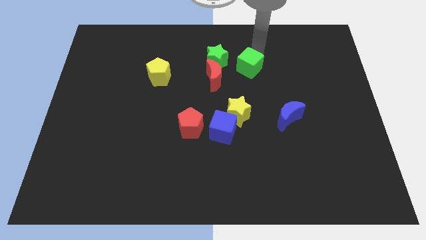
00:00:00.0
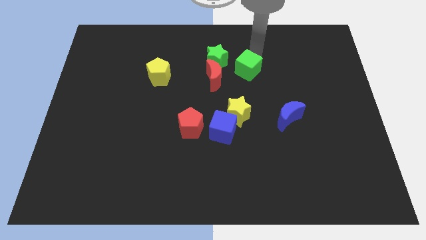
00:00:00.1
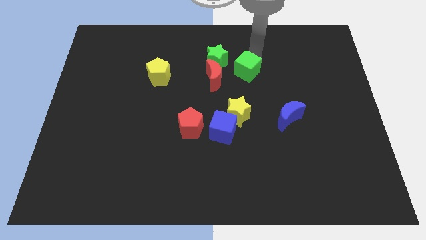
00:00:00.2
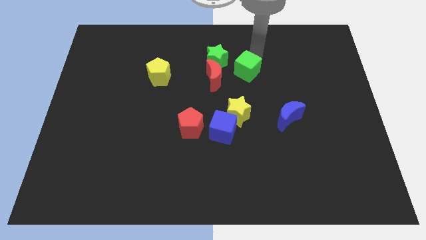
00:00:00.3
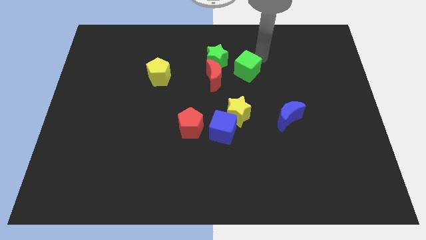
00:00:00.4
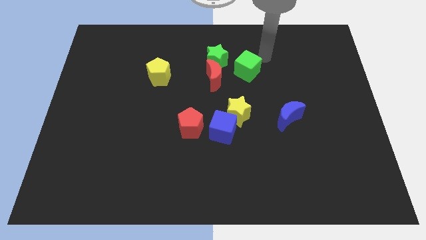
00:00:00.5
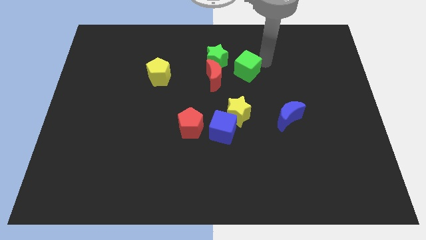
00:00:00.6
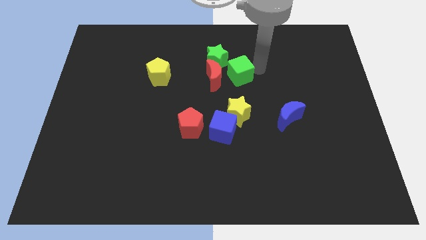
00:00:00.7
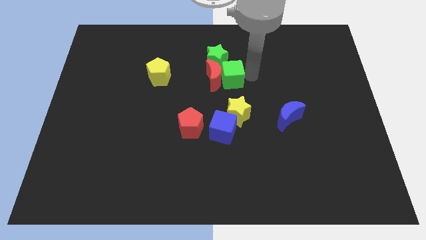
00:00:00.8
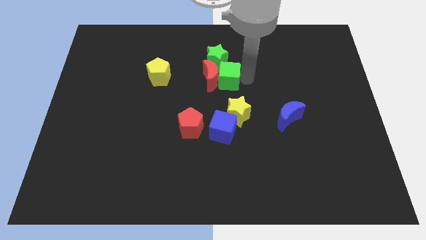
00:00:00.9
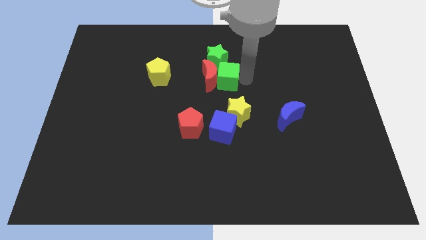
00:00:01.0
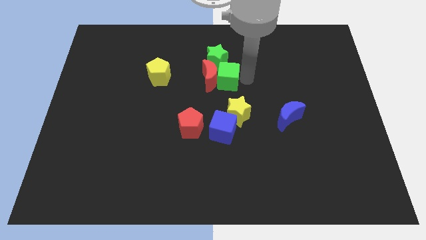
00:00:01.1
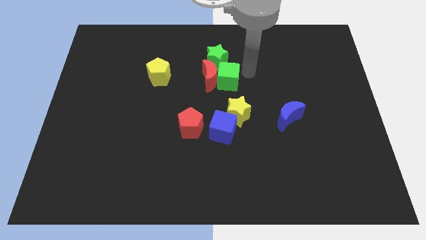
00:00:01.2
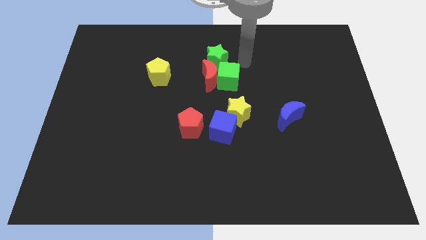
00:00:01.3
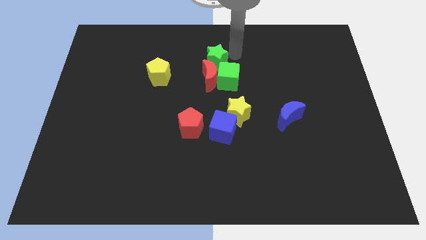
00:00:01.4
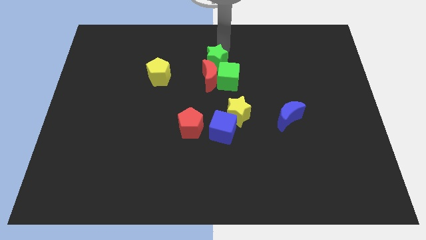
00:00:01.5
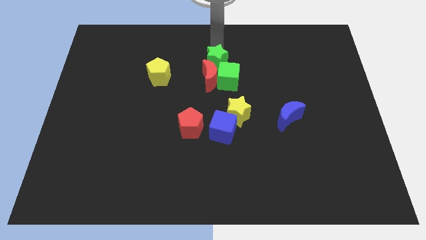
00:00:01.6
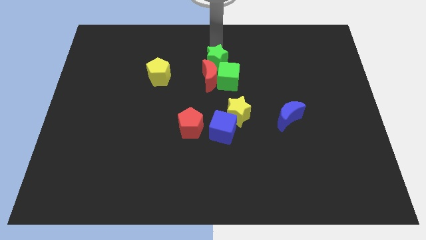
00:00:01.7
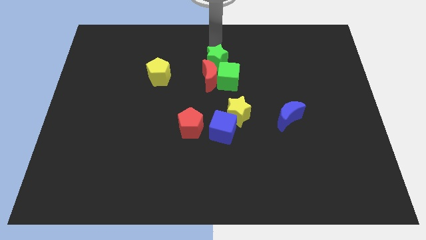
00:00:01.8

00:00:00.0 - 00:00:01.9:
slightly push the green cube beside the red moon

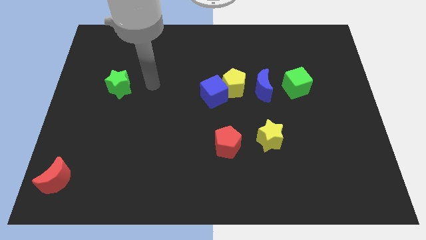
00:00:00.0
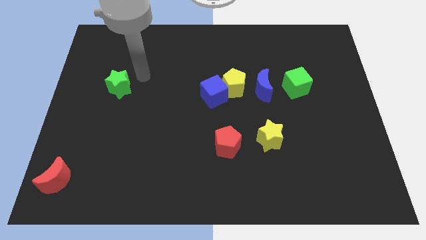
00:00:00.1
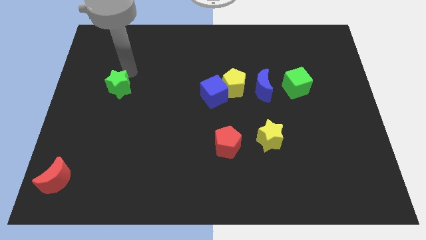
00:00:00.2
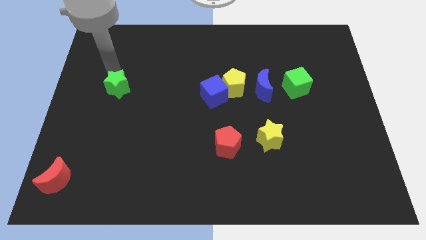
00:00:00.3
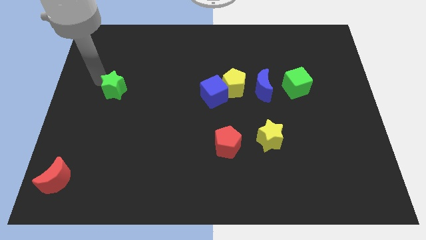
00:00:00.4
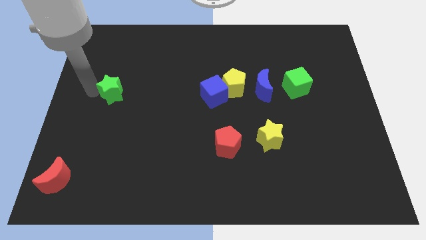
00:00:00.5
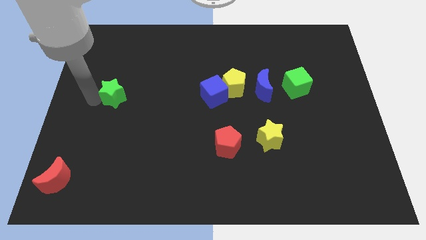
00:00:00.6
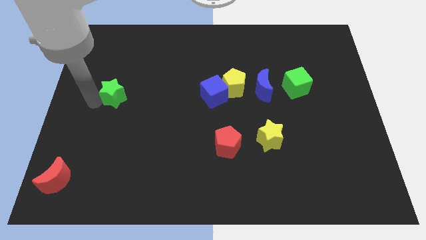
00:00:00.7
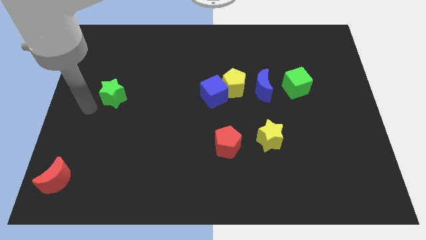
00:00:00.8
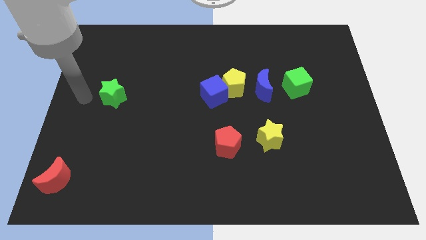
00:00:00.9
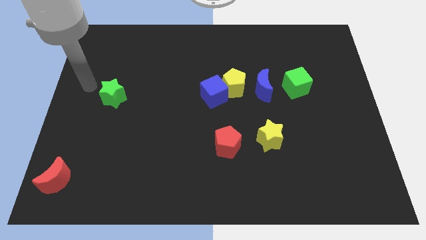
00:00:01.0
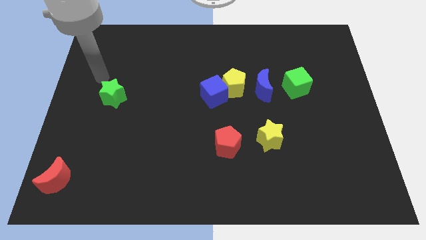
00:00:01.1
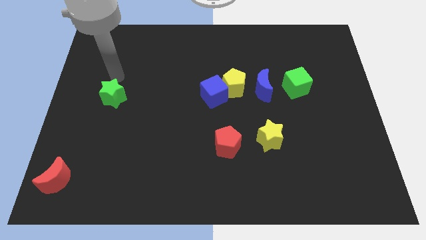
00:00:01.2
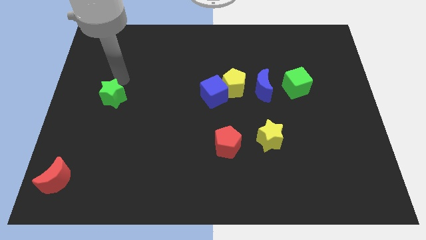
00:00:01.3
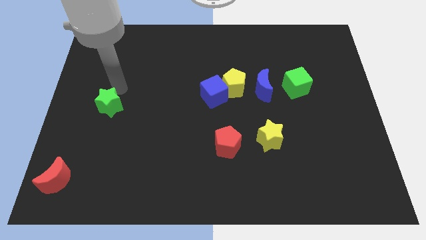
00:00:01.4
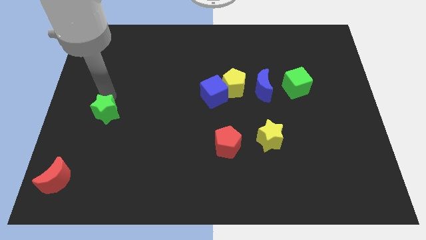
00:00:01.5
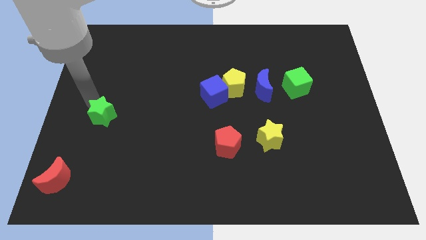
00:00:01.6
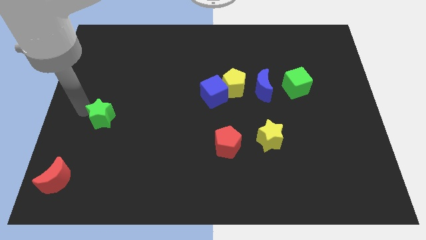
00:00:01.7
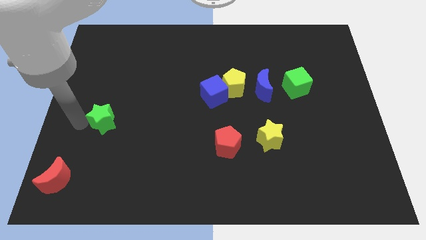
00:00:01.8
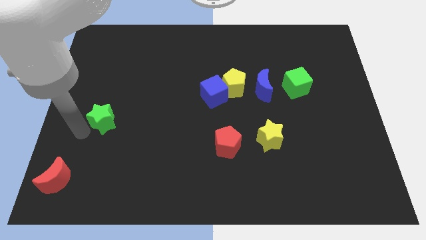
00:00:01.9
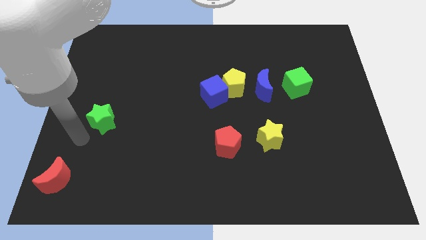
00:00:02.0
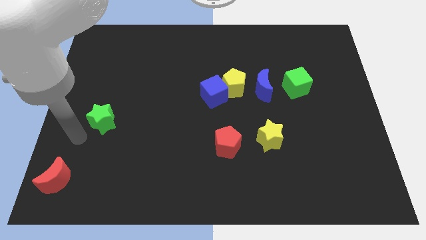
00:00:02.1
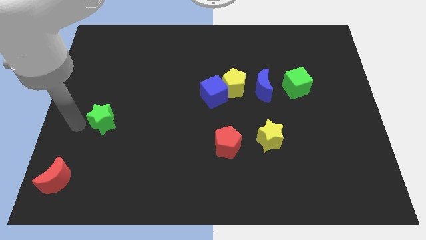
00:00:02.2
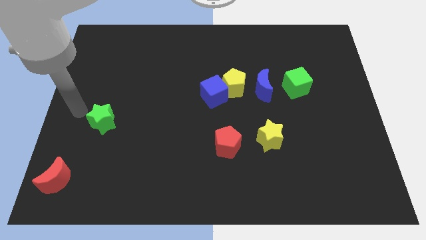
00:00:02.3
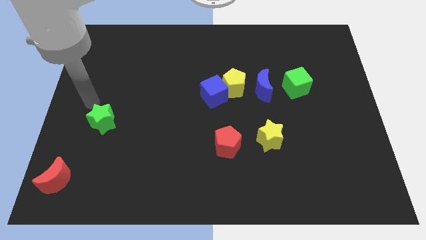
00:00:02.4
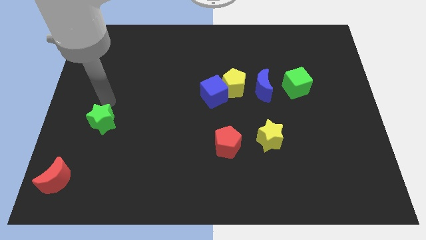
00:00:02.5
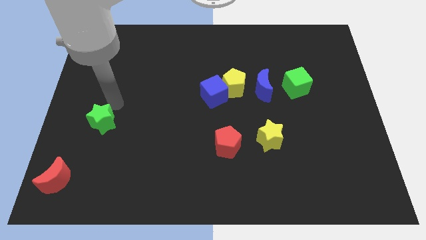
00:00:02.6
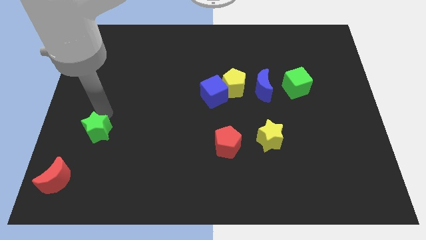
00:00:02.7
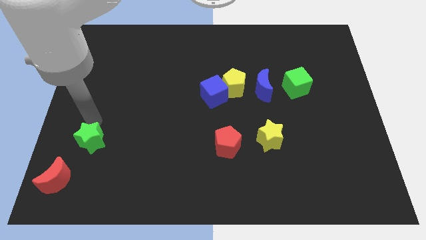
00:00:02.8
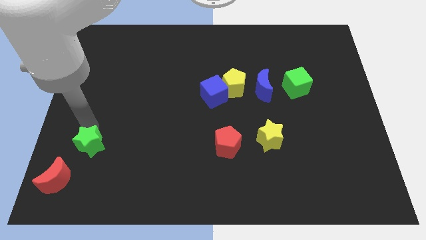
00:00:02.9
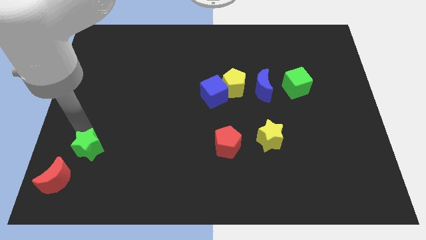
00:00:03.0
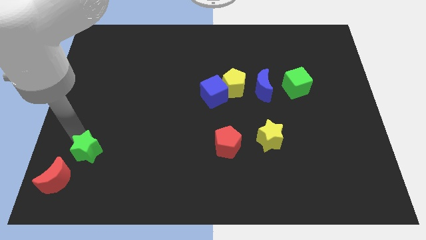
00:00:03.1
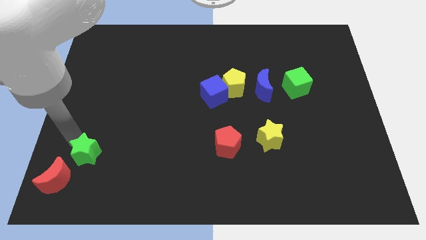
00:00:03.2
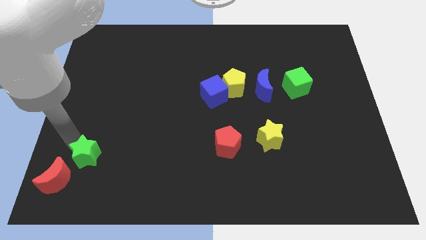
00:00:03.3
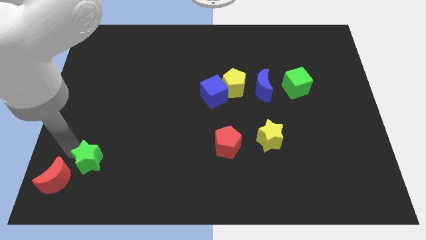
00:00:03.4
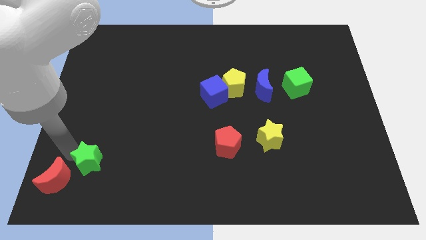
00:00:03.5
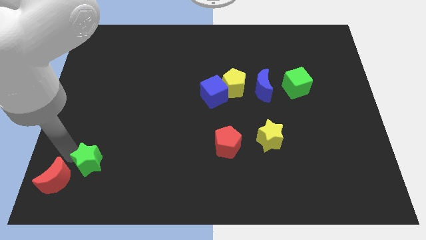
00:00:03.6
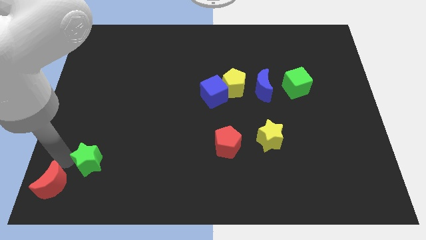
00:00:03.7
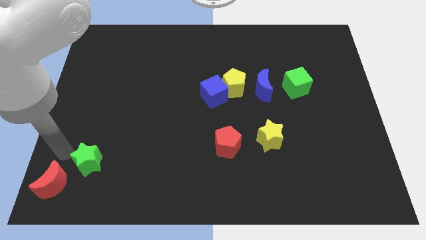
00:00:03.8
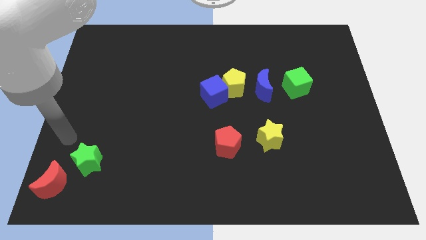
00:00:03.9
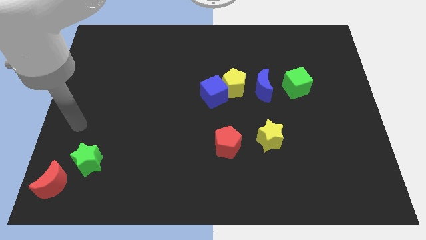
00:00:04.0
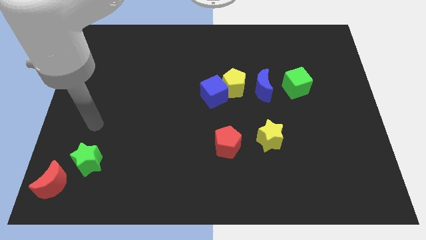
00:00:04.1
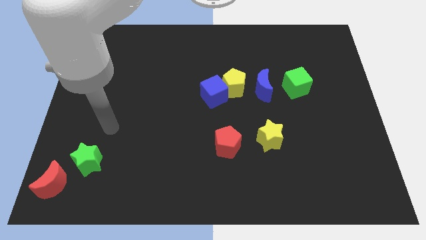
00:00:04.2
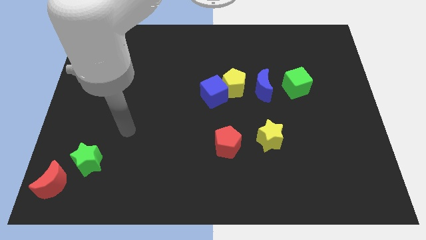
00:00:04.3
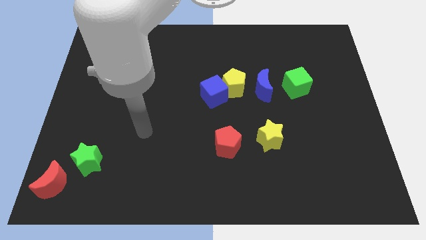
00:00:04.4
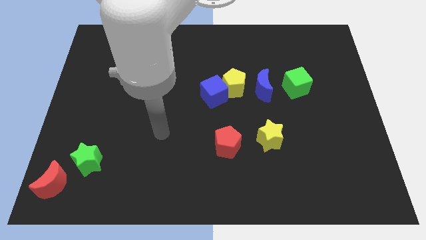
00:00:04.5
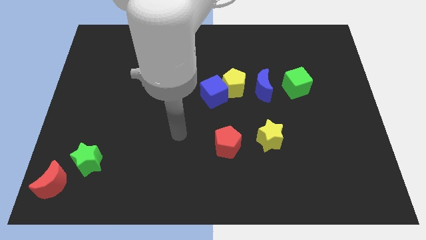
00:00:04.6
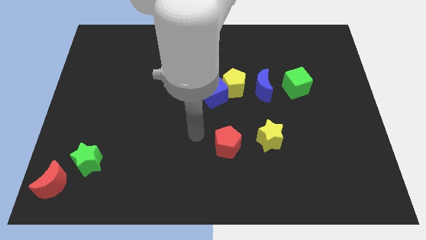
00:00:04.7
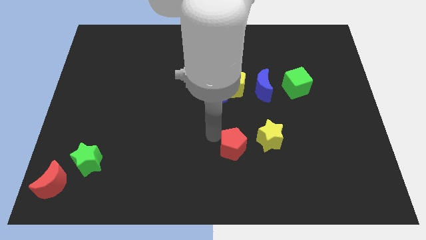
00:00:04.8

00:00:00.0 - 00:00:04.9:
move the green star ahead right to the red crescent

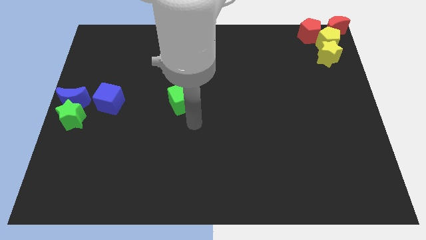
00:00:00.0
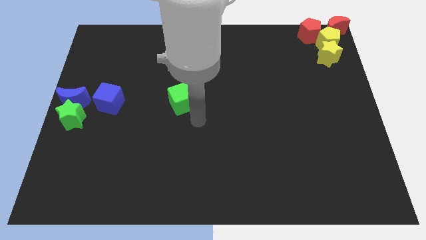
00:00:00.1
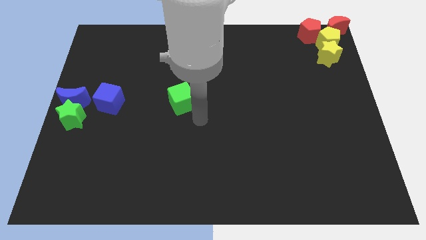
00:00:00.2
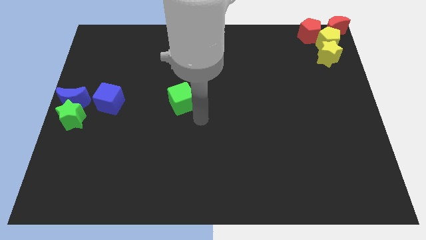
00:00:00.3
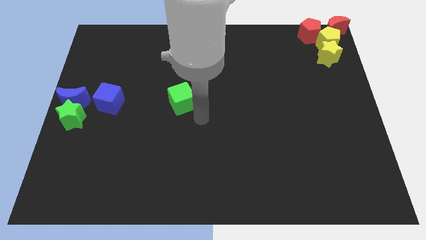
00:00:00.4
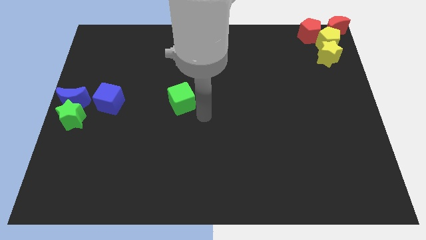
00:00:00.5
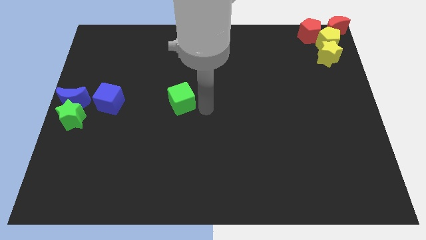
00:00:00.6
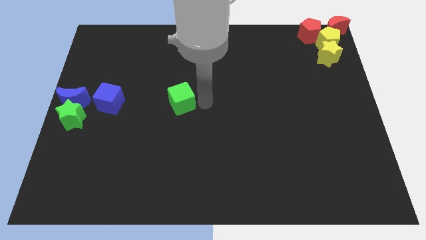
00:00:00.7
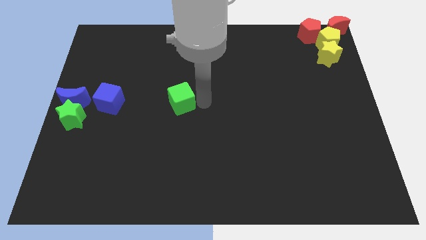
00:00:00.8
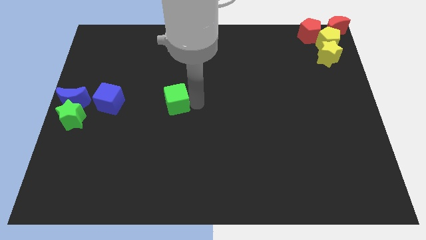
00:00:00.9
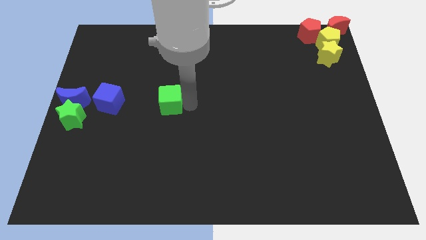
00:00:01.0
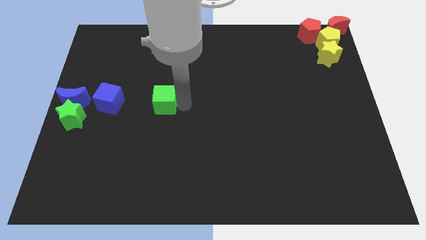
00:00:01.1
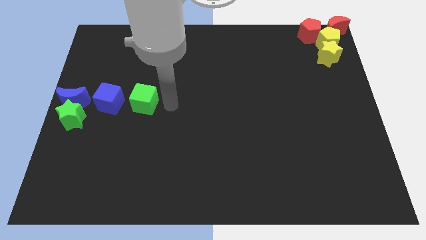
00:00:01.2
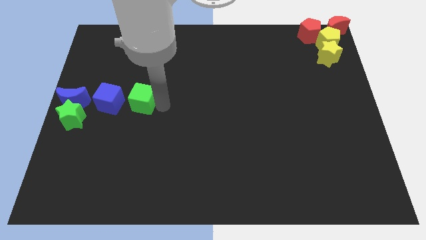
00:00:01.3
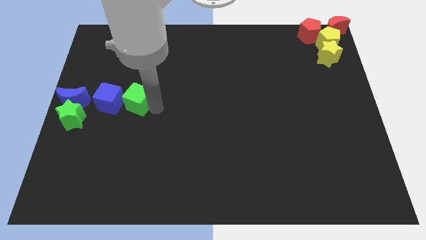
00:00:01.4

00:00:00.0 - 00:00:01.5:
move the green cube right to the blue cube

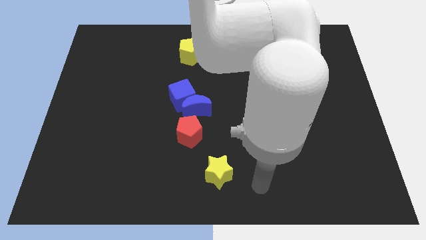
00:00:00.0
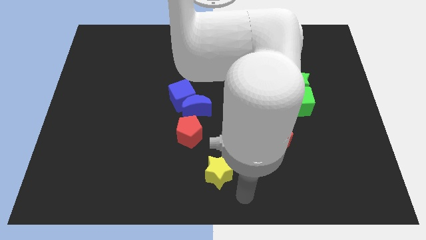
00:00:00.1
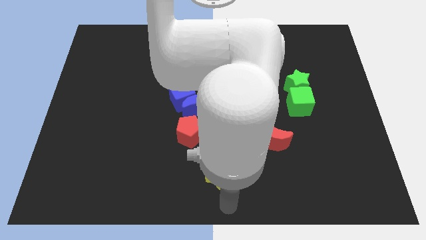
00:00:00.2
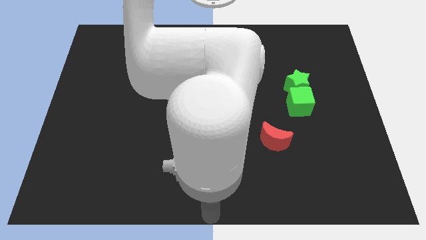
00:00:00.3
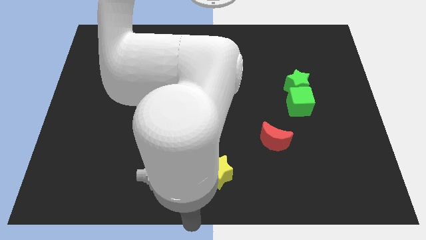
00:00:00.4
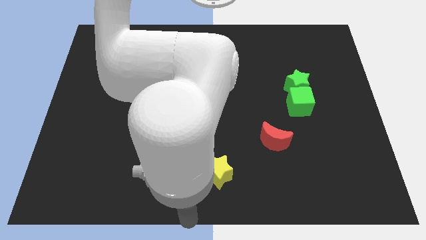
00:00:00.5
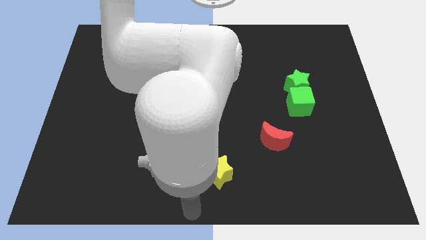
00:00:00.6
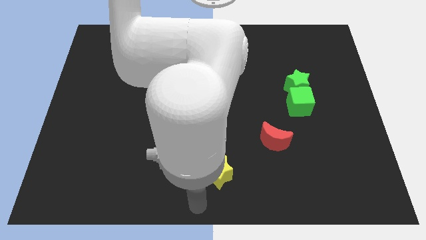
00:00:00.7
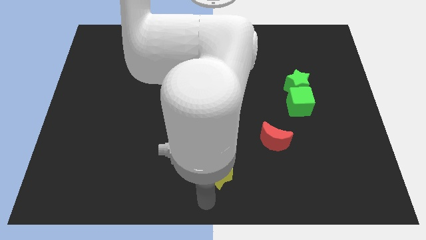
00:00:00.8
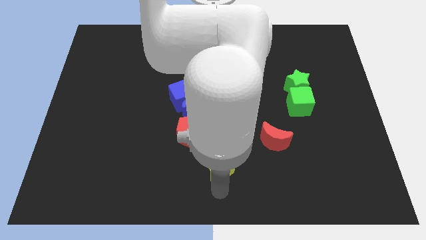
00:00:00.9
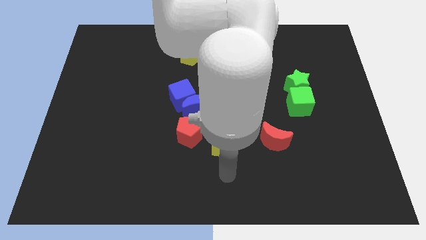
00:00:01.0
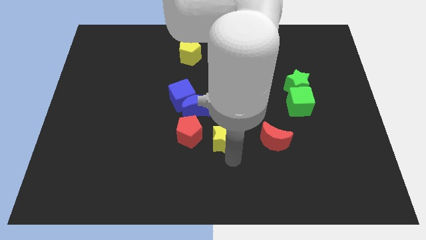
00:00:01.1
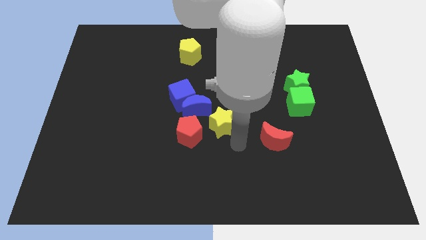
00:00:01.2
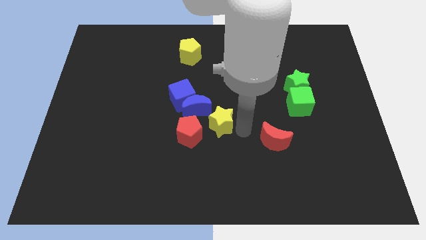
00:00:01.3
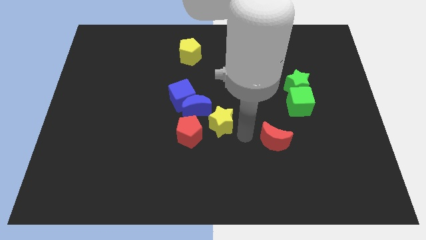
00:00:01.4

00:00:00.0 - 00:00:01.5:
push the yellow star close to the blue crescent
